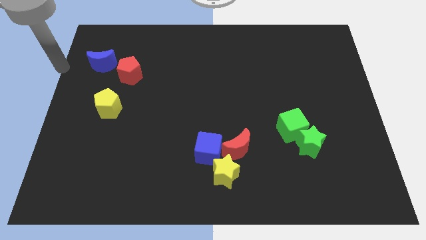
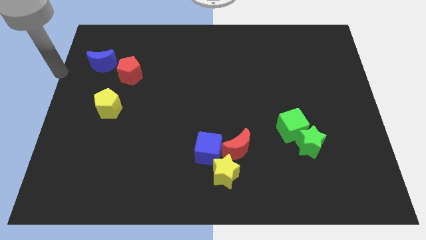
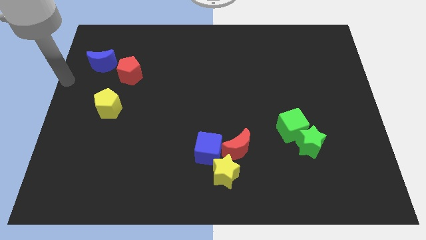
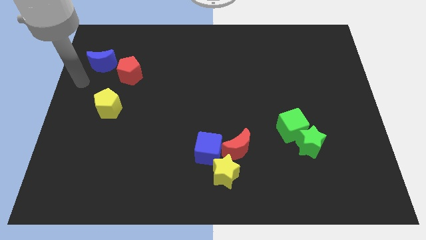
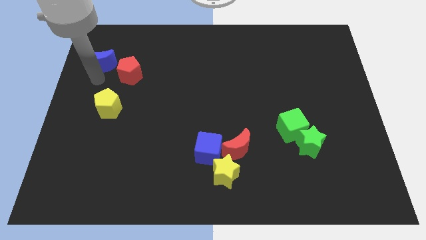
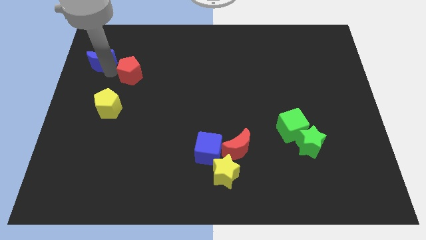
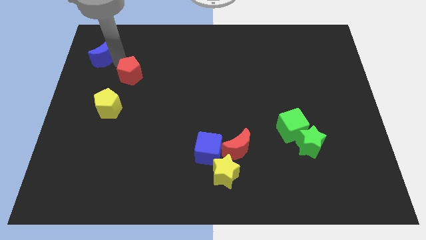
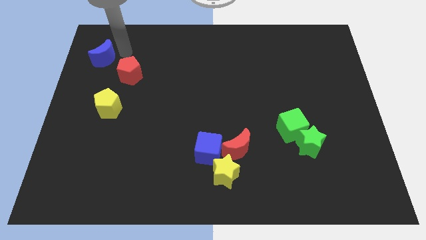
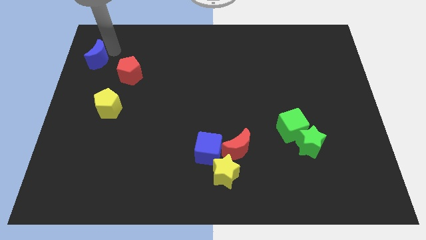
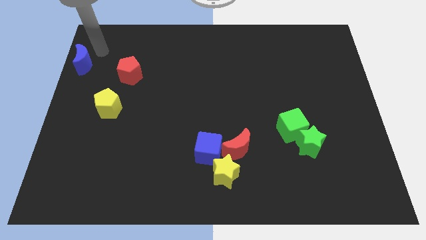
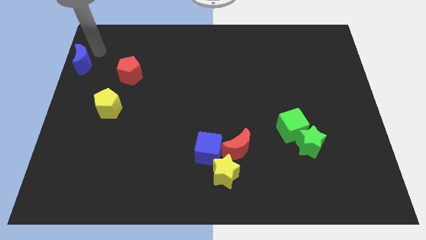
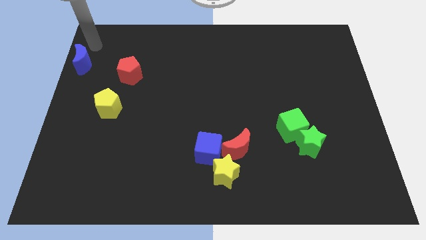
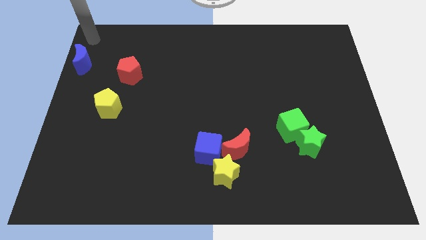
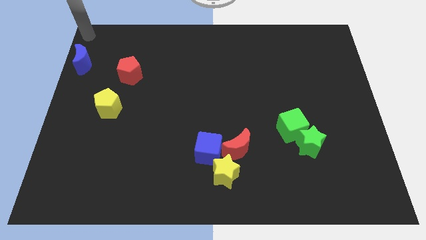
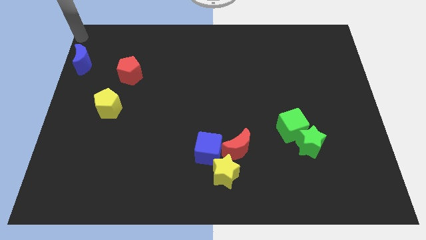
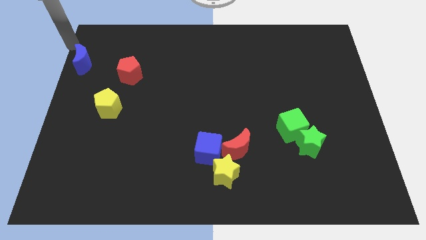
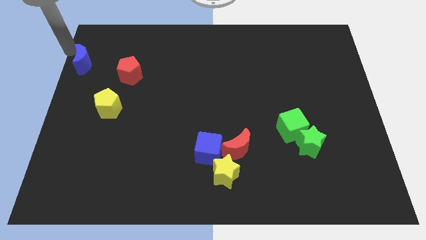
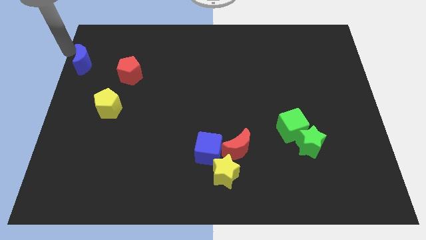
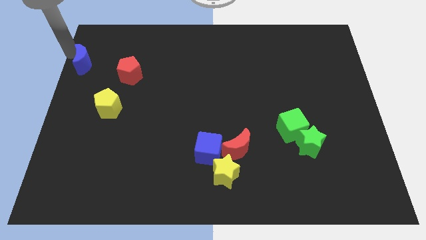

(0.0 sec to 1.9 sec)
move the blue crescent diagonally top left to the yellow pentagon

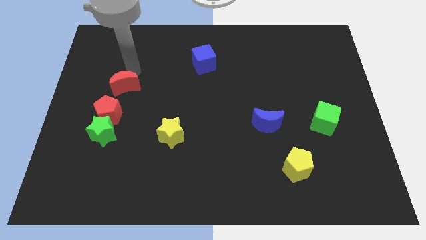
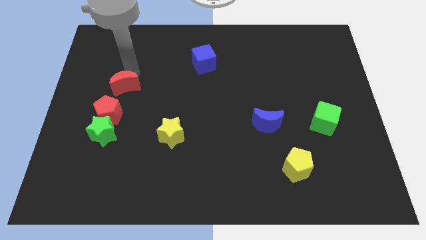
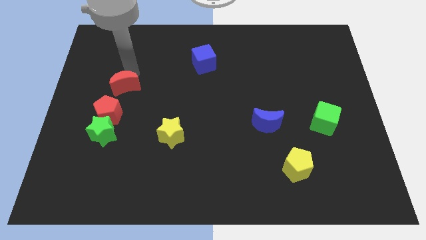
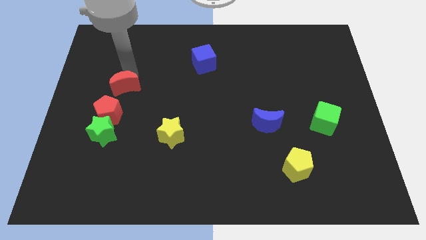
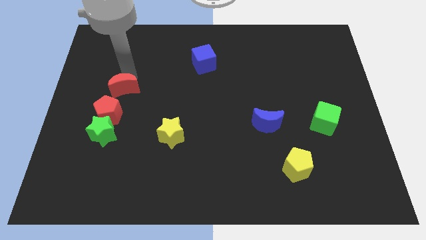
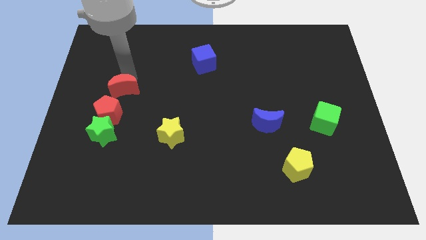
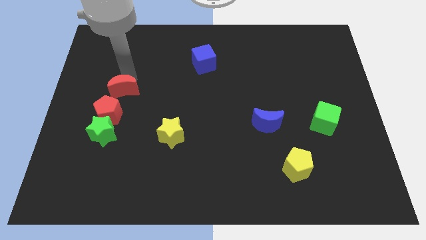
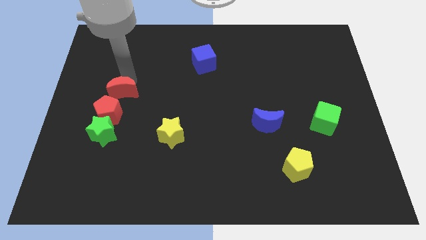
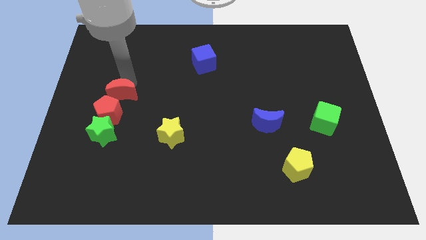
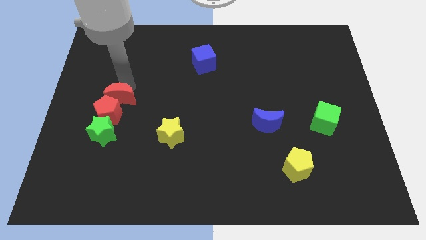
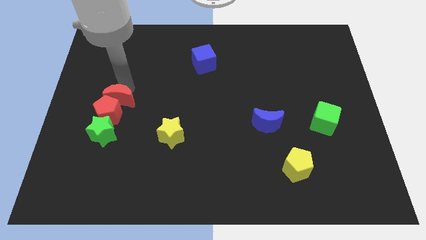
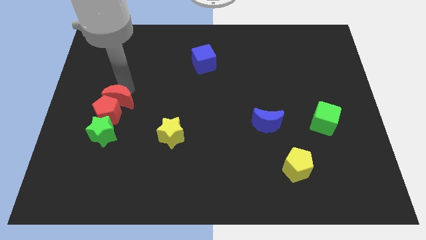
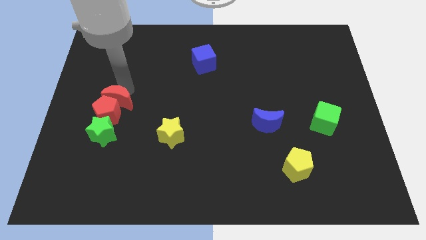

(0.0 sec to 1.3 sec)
move the red crescent close to the top of the red pentagon

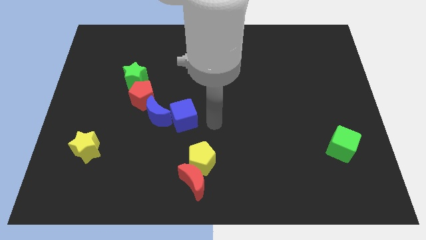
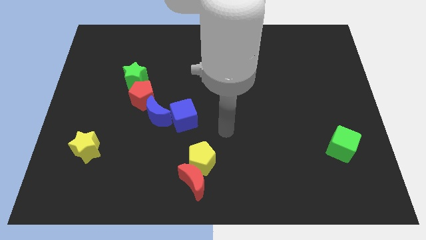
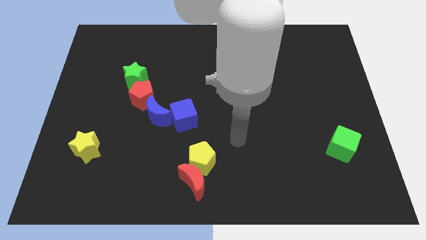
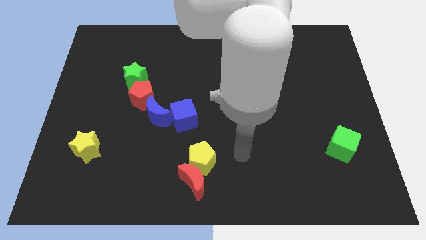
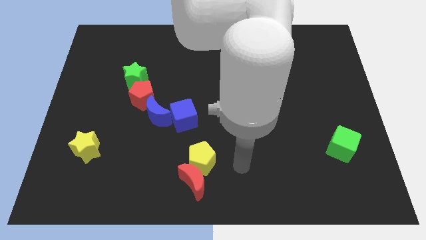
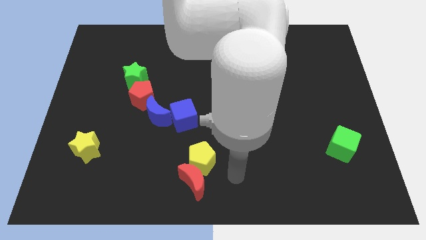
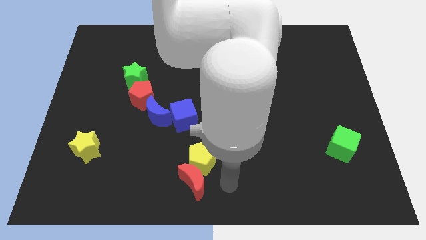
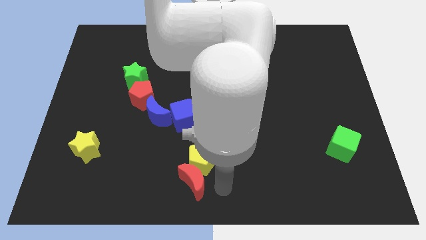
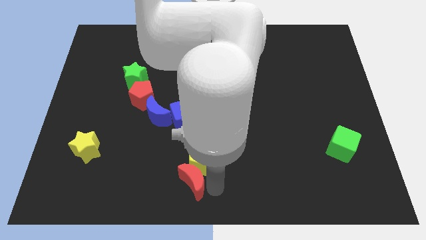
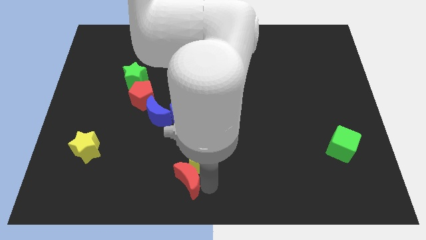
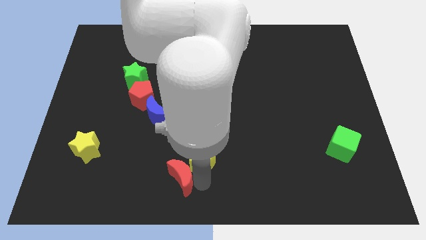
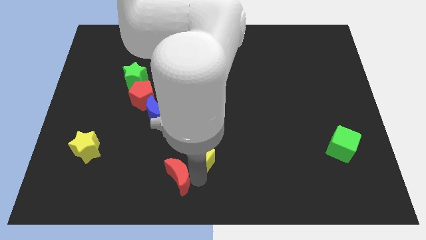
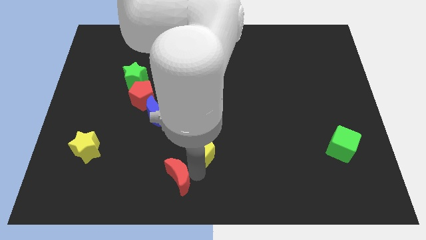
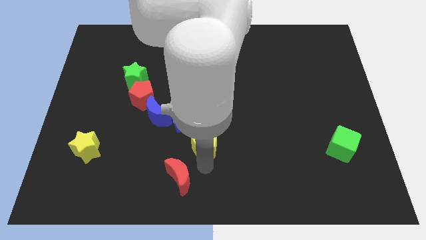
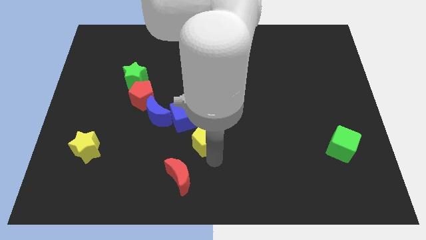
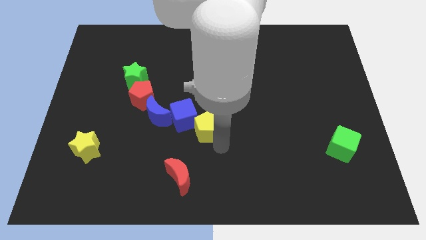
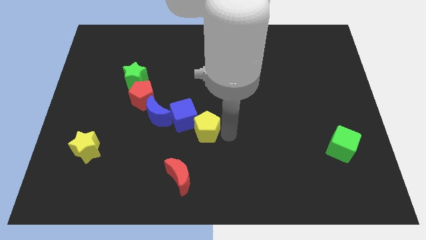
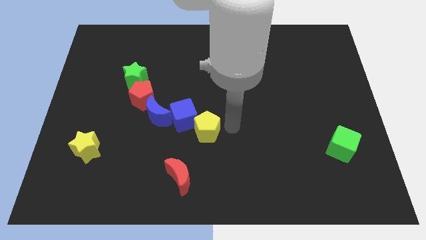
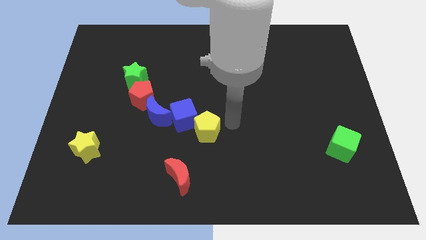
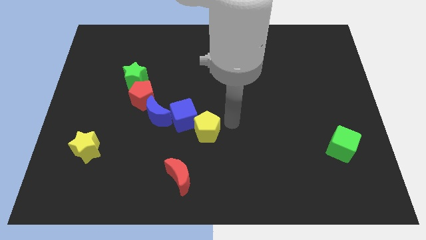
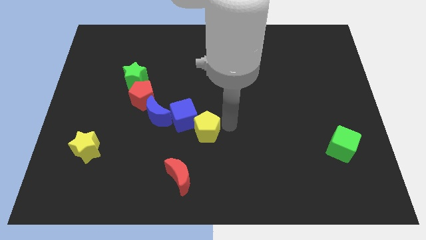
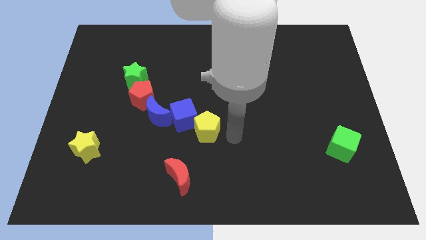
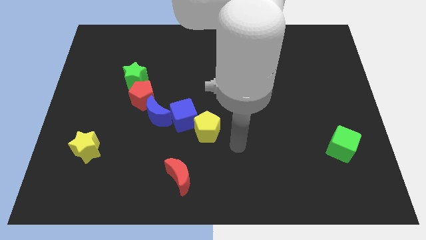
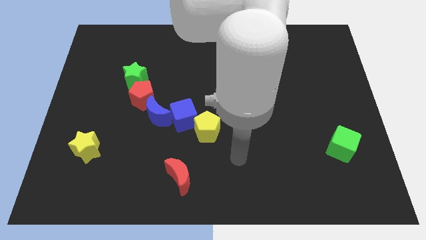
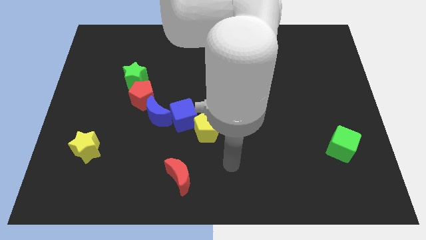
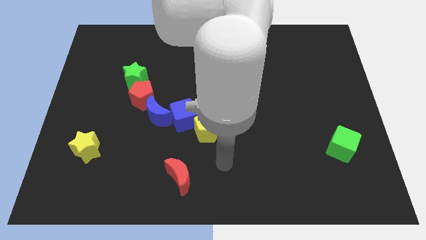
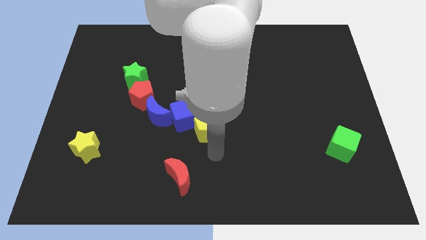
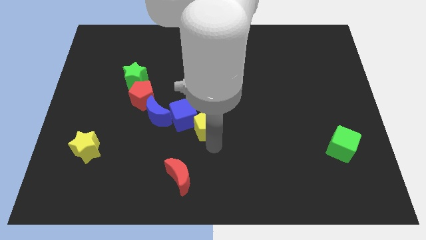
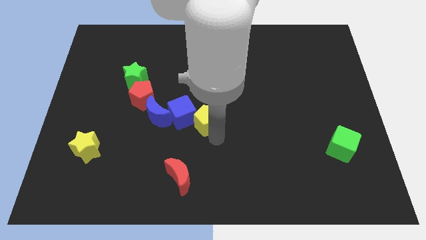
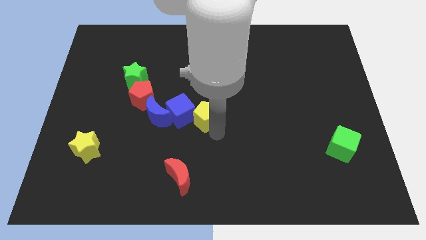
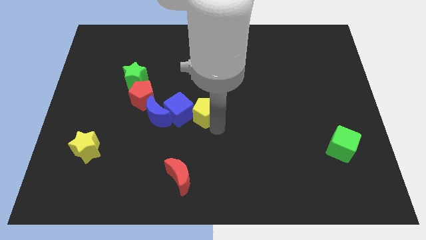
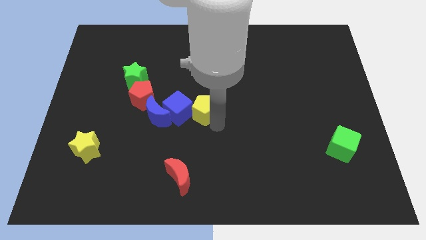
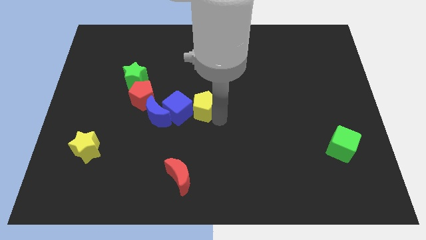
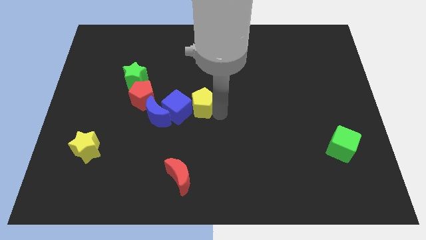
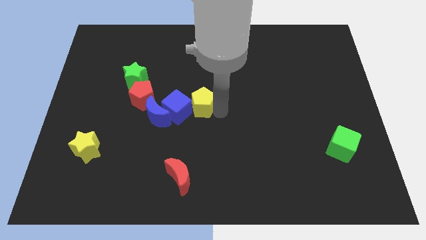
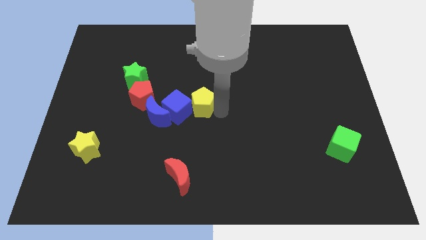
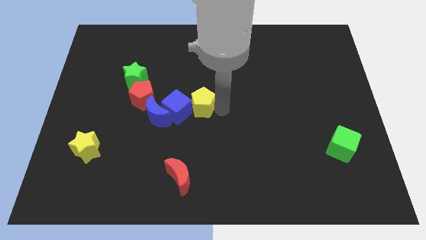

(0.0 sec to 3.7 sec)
separate the yellow pentagon from red moon

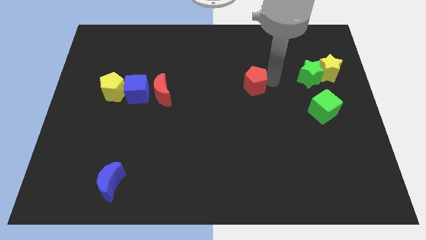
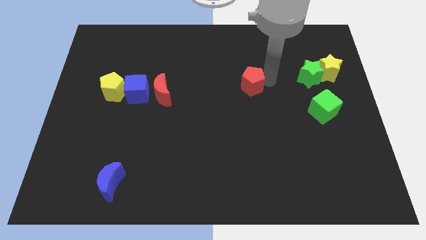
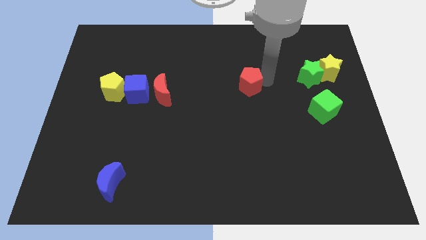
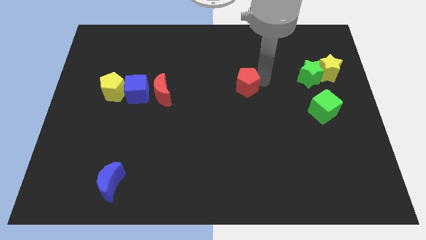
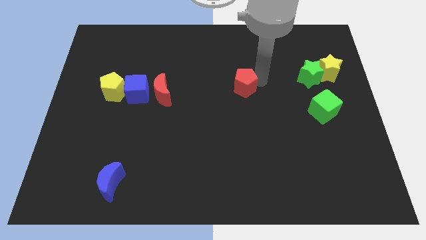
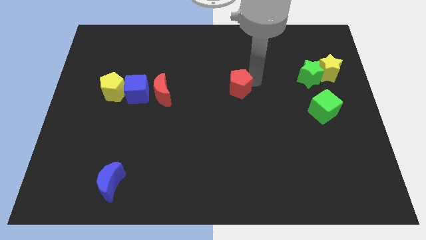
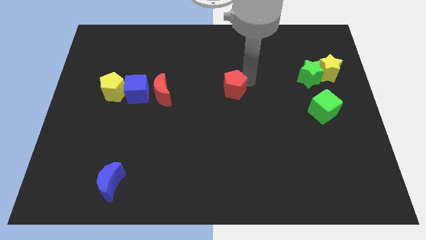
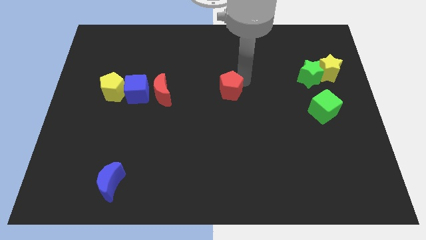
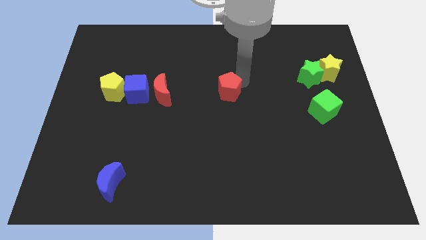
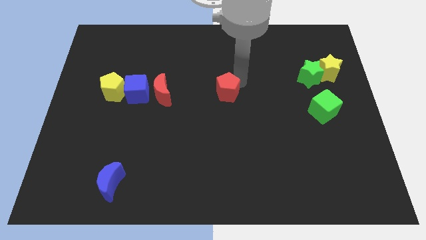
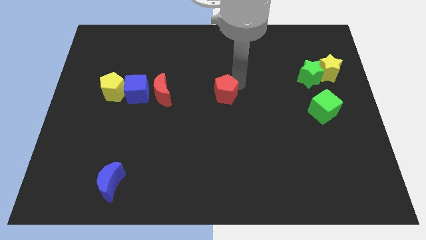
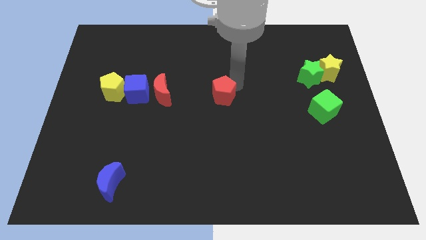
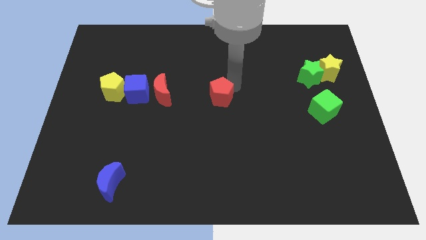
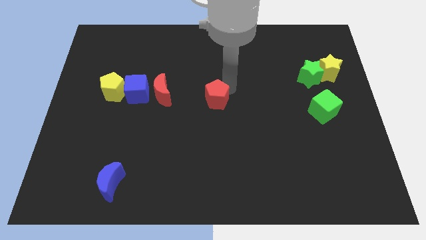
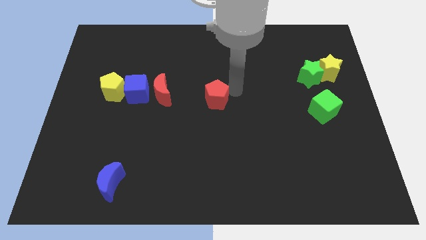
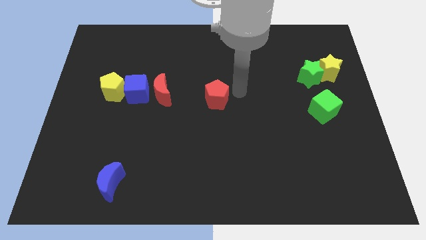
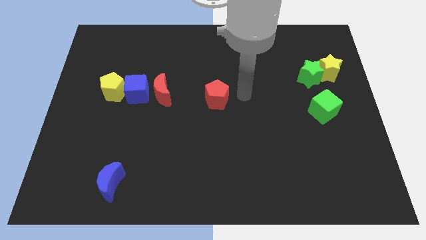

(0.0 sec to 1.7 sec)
push the red pentagon to the left of the board

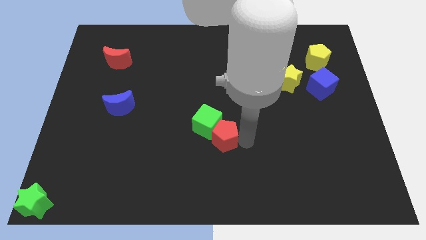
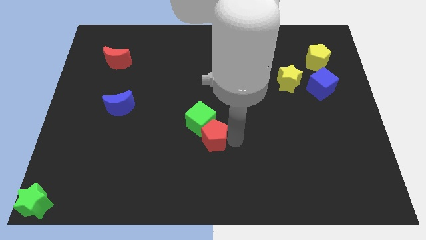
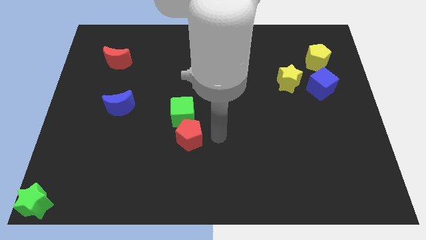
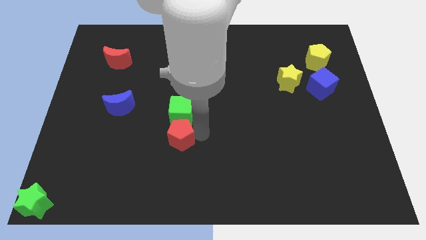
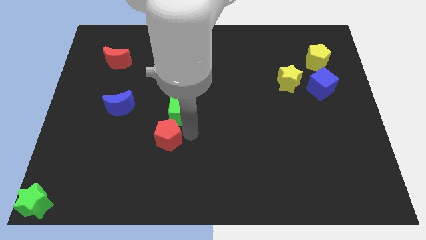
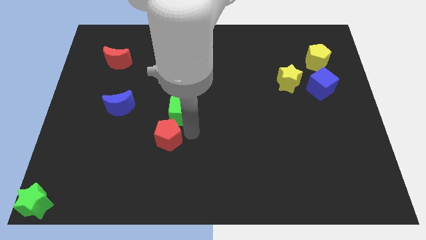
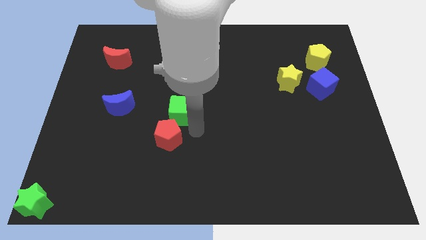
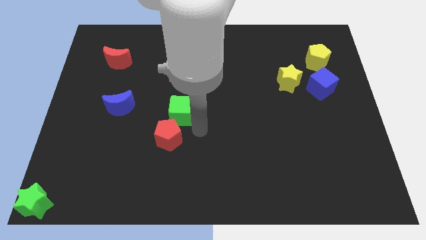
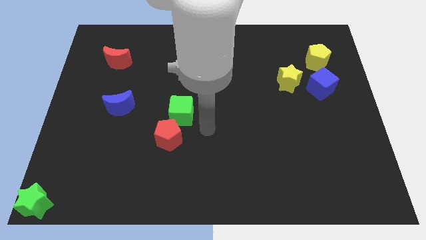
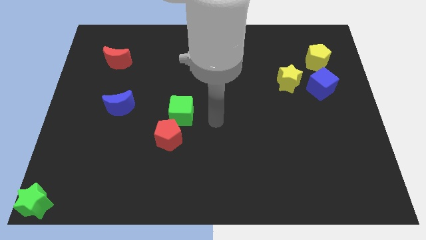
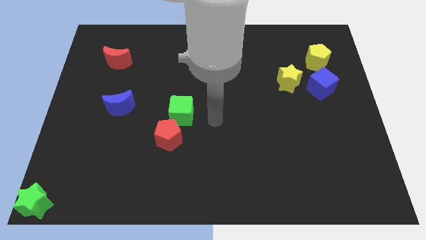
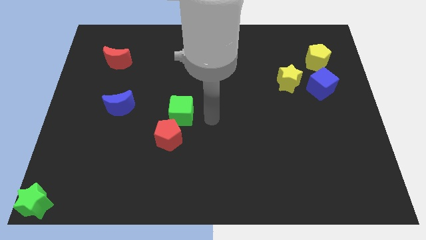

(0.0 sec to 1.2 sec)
move the red pentagon slightly to the left
